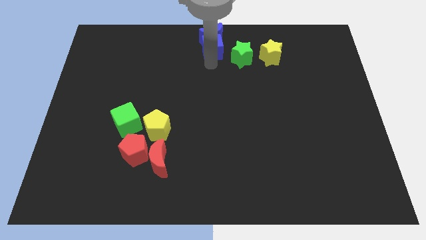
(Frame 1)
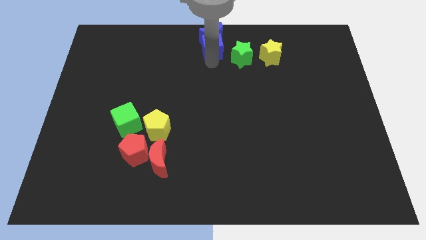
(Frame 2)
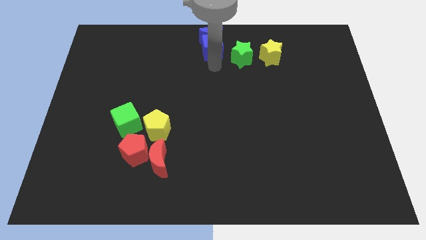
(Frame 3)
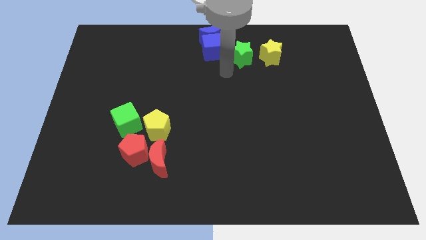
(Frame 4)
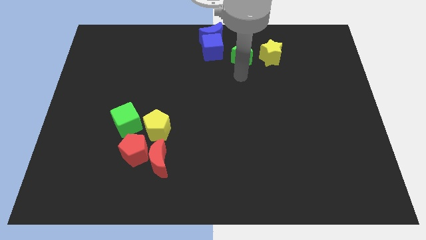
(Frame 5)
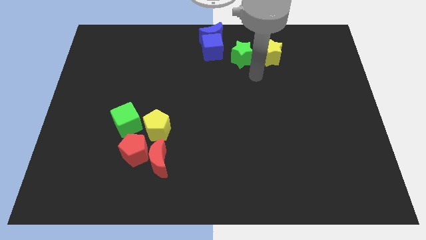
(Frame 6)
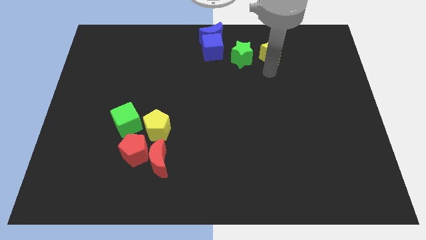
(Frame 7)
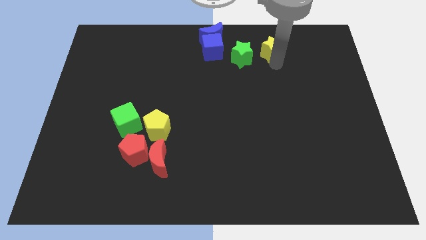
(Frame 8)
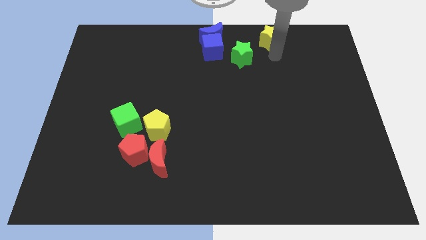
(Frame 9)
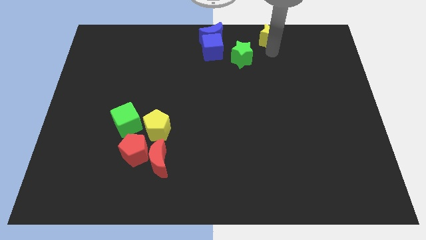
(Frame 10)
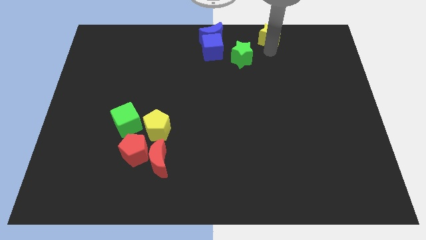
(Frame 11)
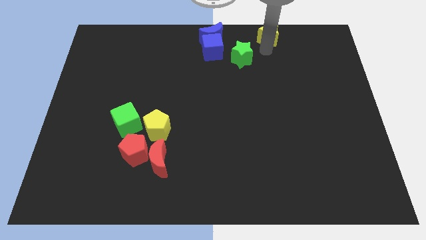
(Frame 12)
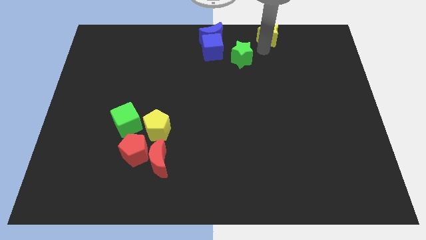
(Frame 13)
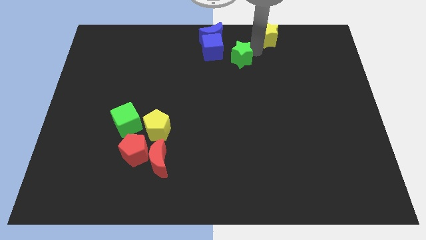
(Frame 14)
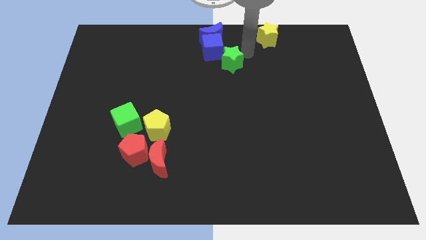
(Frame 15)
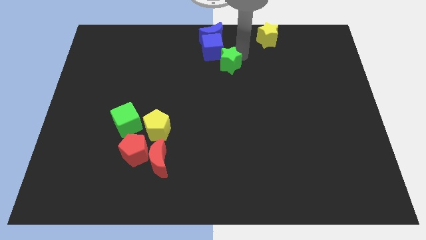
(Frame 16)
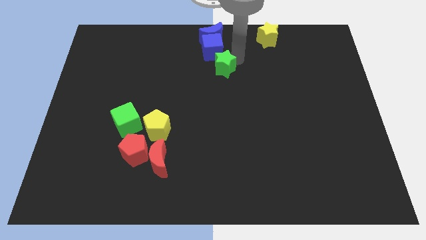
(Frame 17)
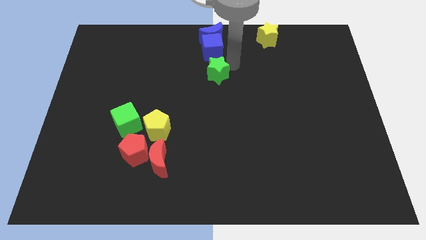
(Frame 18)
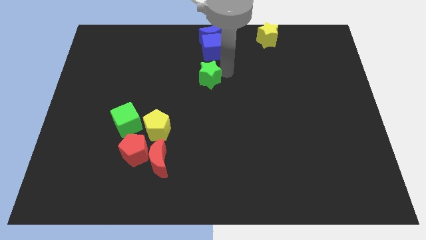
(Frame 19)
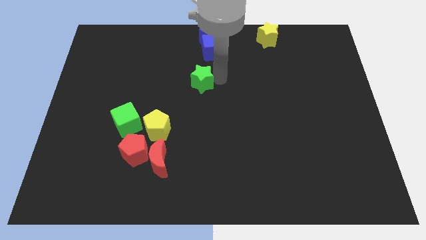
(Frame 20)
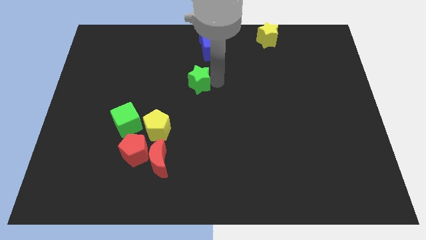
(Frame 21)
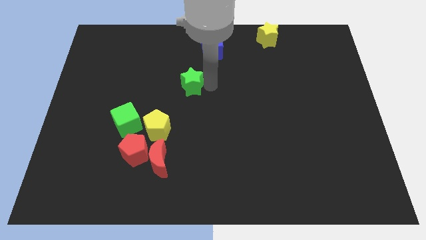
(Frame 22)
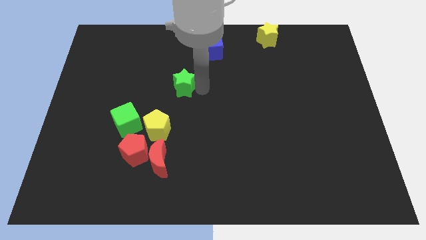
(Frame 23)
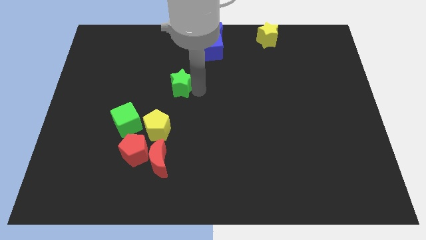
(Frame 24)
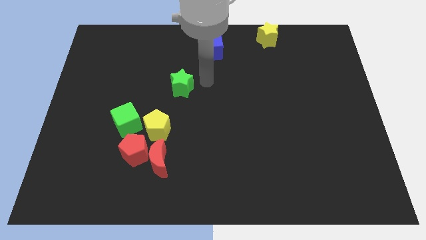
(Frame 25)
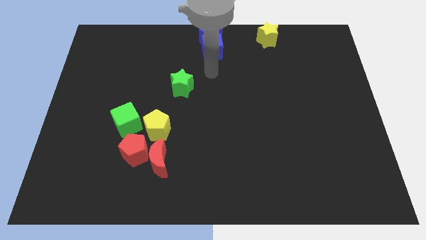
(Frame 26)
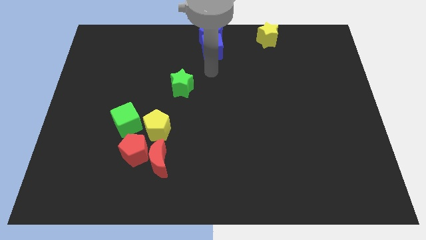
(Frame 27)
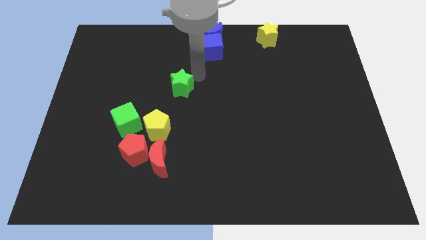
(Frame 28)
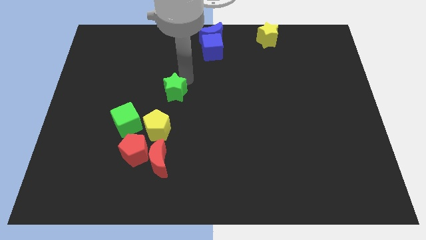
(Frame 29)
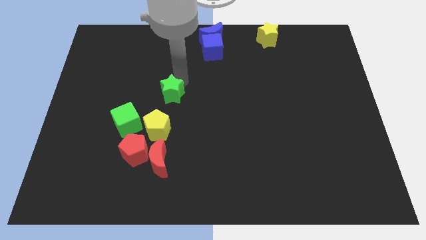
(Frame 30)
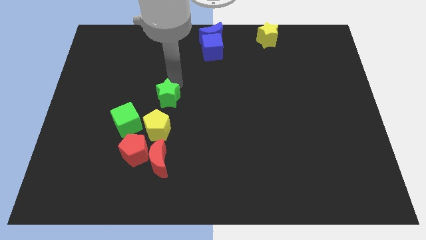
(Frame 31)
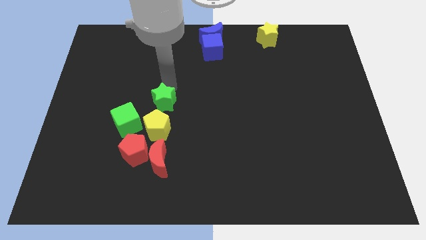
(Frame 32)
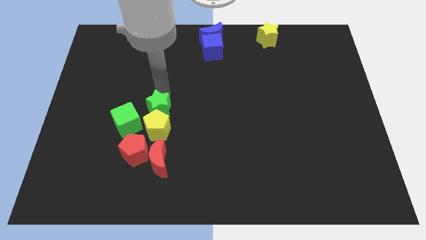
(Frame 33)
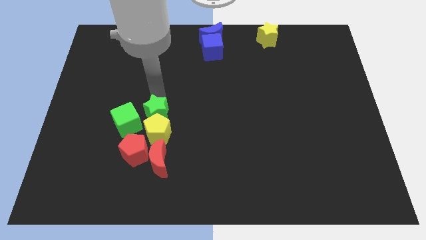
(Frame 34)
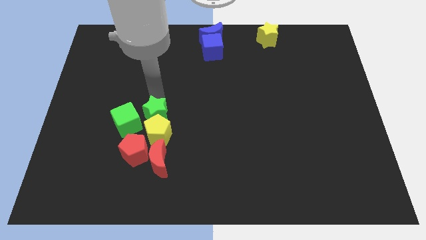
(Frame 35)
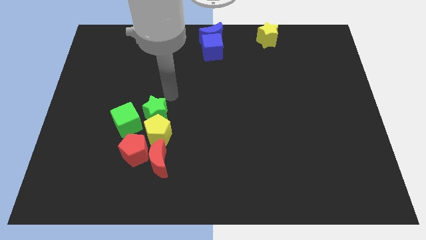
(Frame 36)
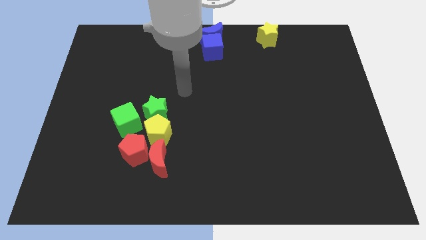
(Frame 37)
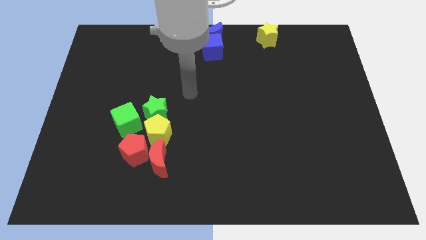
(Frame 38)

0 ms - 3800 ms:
move green star into the group of blocks

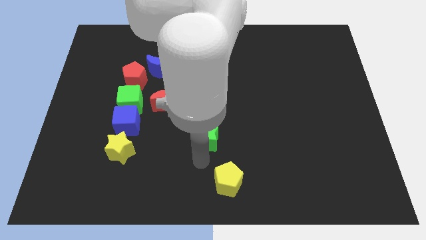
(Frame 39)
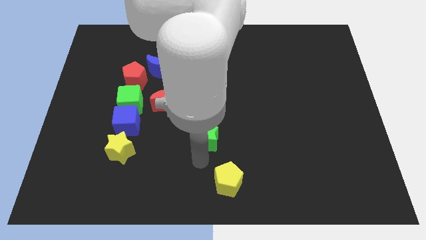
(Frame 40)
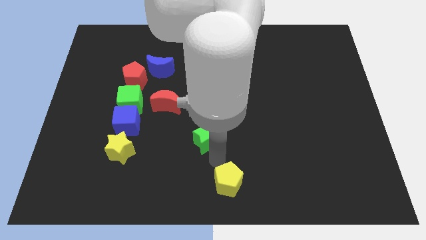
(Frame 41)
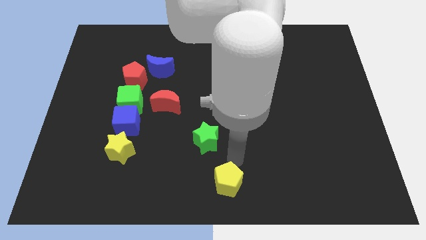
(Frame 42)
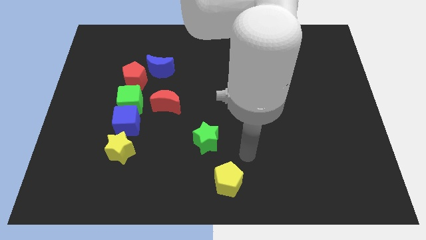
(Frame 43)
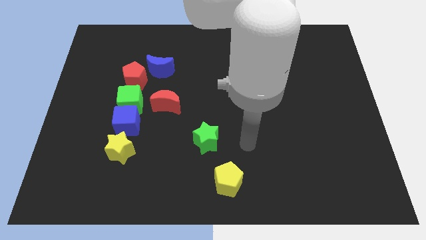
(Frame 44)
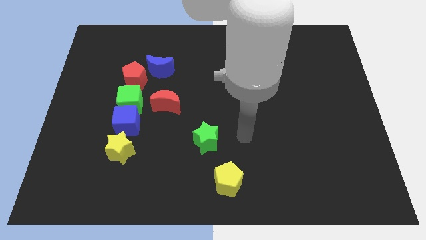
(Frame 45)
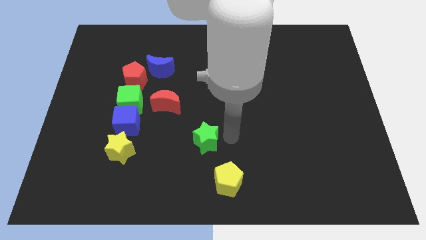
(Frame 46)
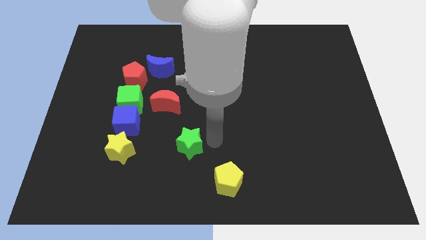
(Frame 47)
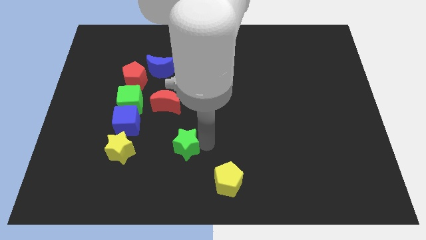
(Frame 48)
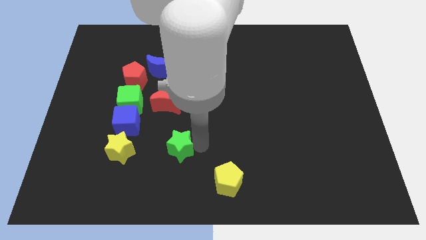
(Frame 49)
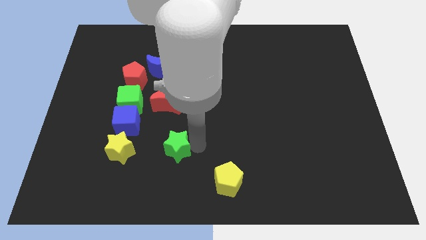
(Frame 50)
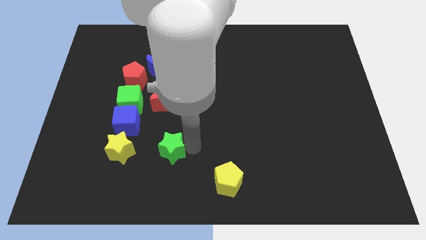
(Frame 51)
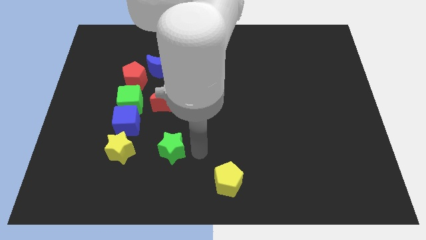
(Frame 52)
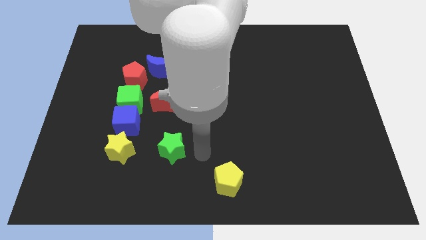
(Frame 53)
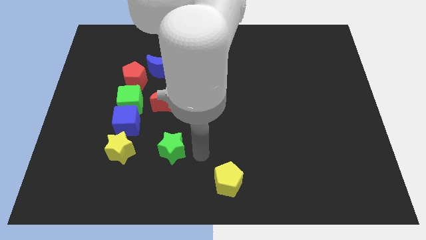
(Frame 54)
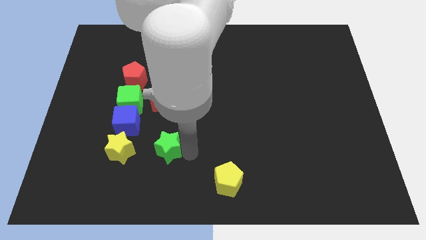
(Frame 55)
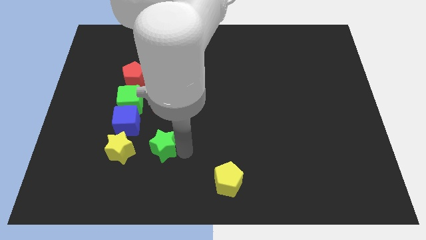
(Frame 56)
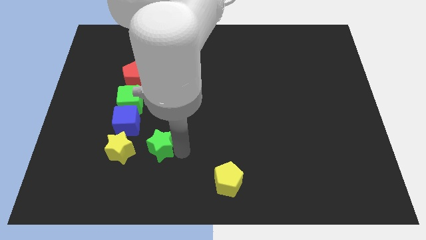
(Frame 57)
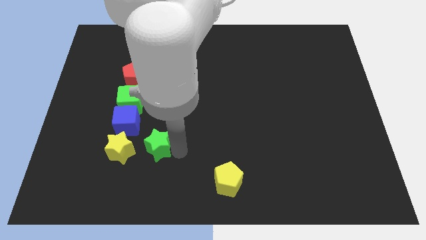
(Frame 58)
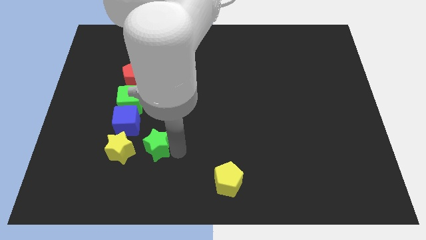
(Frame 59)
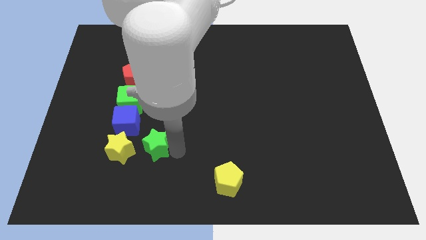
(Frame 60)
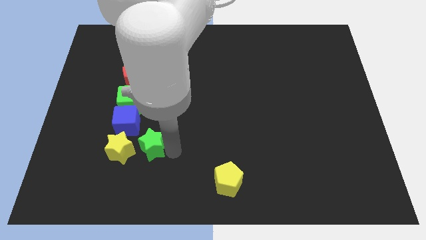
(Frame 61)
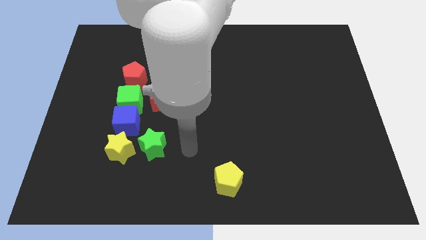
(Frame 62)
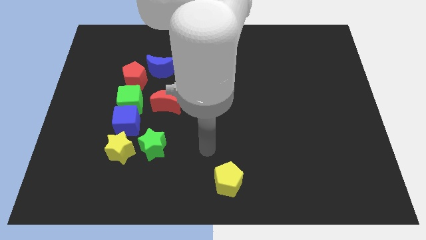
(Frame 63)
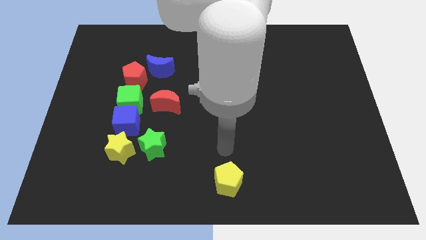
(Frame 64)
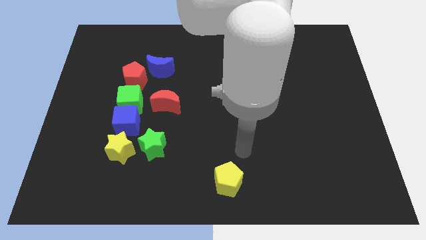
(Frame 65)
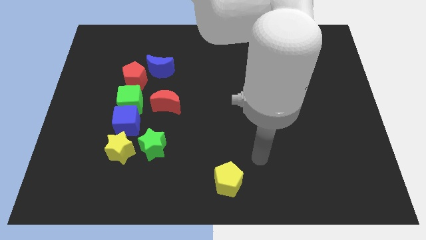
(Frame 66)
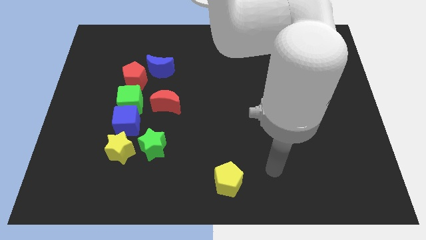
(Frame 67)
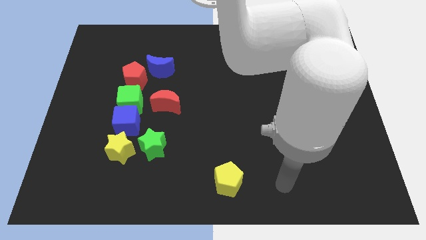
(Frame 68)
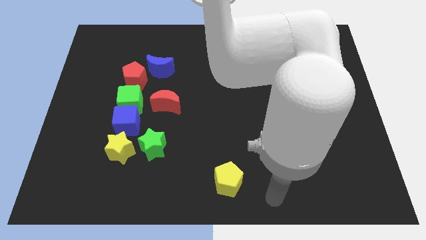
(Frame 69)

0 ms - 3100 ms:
move the green star to the right of the yellow star

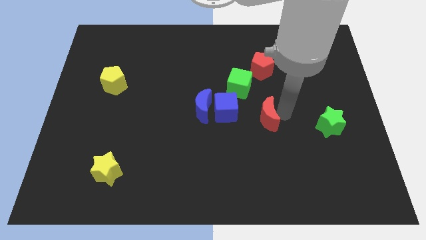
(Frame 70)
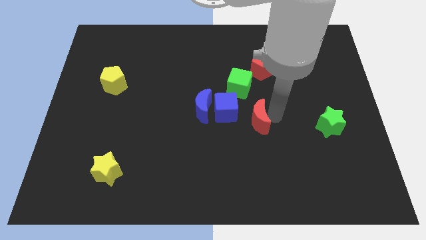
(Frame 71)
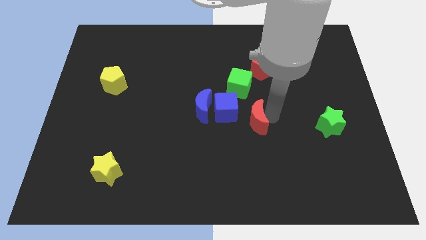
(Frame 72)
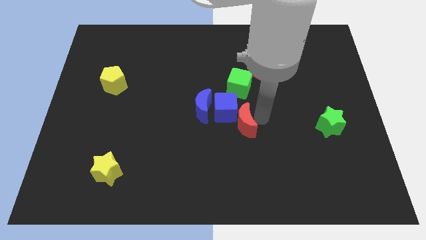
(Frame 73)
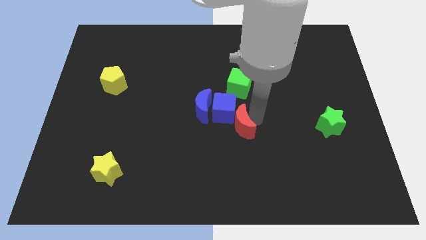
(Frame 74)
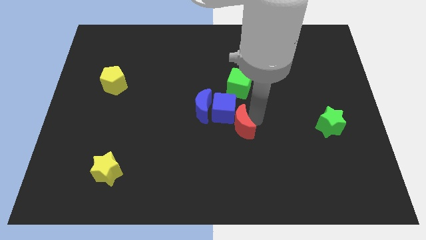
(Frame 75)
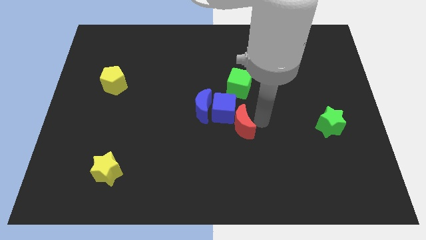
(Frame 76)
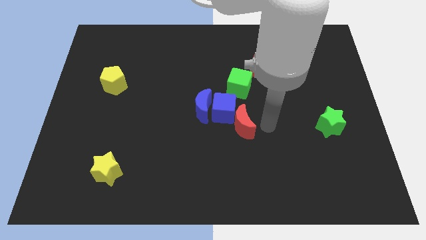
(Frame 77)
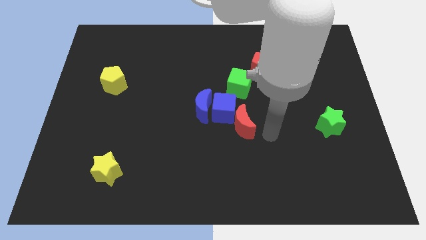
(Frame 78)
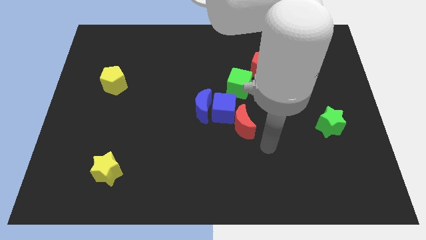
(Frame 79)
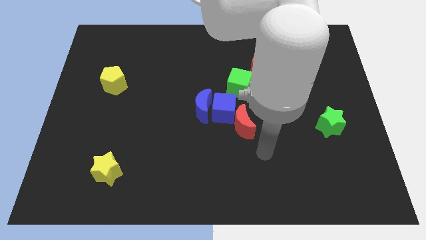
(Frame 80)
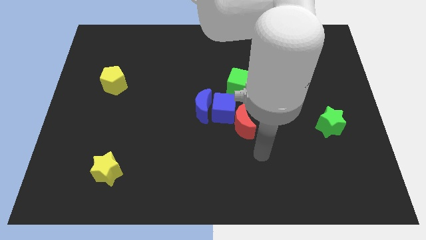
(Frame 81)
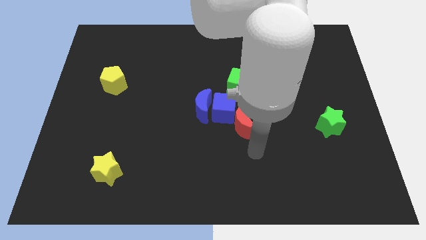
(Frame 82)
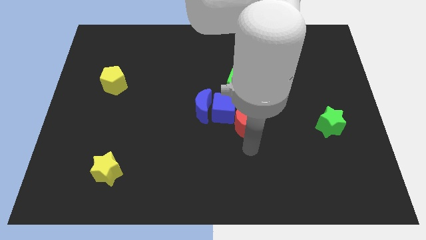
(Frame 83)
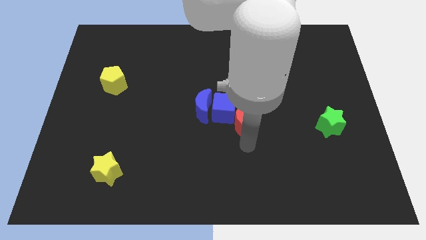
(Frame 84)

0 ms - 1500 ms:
drag the red crescent close to the blue cube

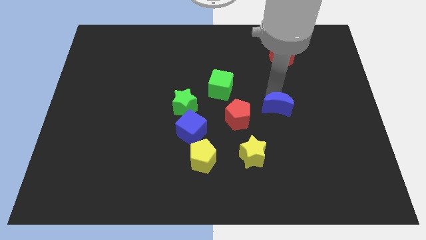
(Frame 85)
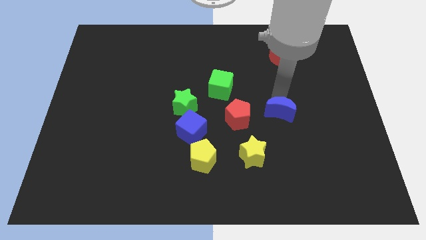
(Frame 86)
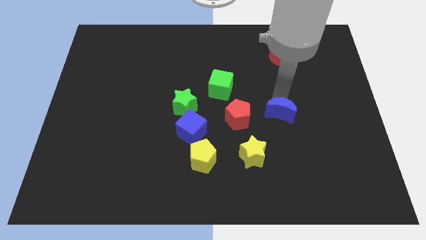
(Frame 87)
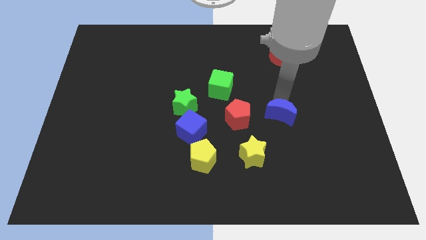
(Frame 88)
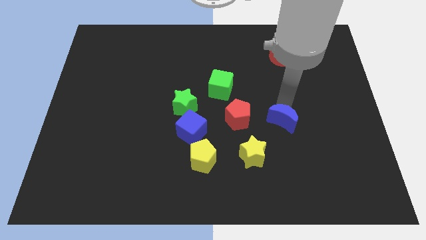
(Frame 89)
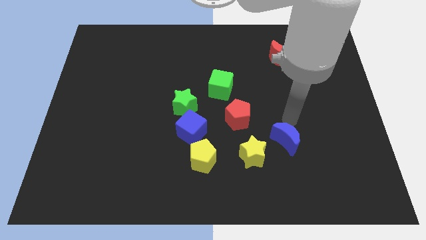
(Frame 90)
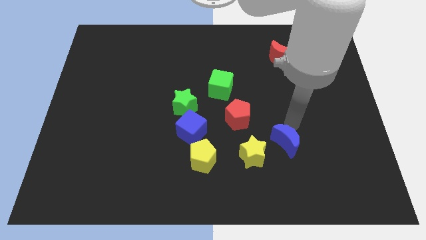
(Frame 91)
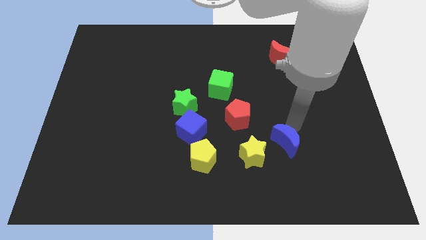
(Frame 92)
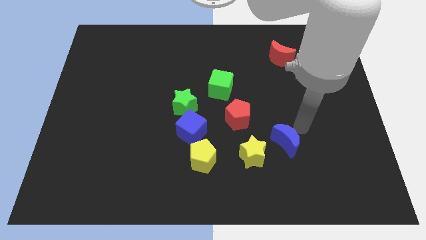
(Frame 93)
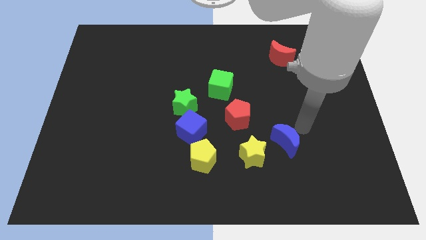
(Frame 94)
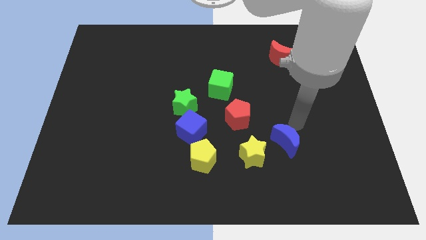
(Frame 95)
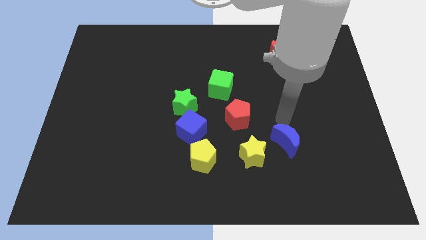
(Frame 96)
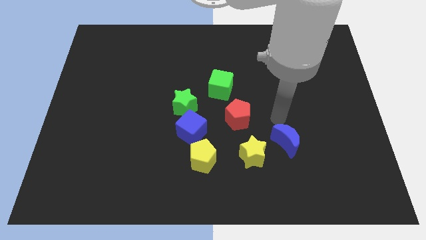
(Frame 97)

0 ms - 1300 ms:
push the blue crescent towards the right side of the yellow star
